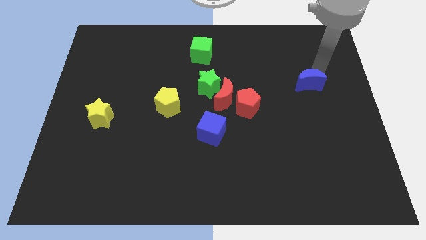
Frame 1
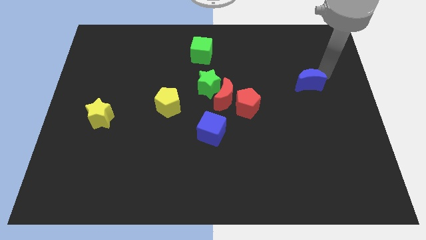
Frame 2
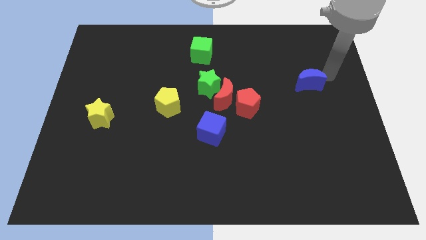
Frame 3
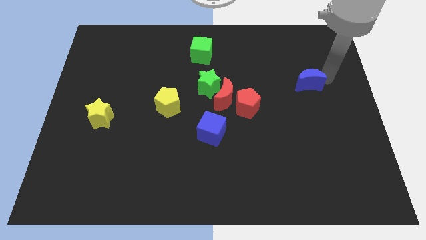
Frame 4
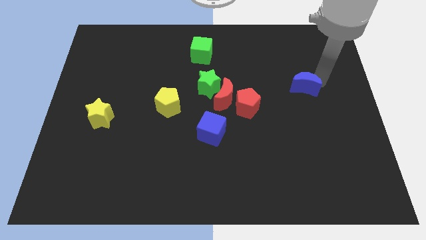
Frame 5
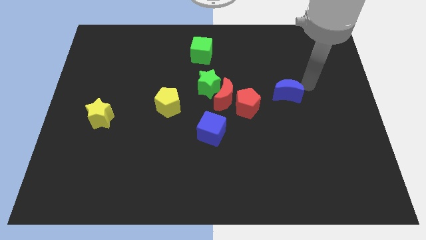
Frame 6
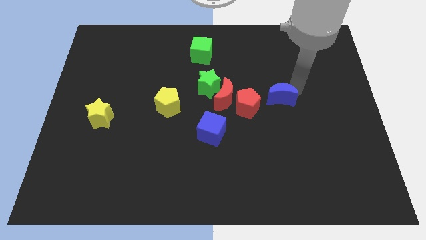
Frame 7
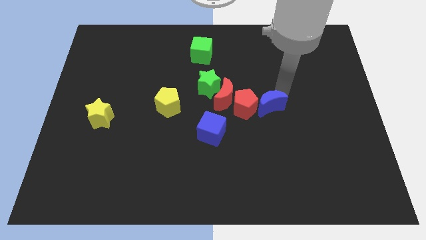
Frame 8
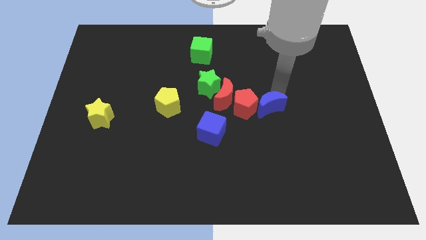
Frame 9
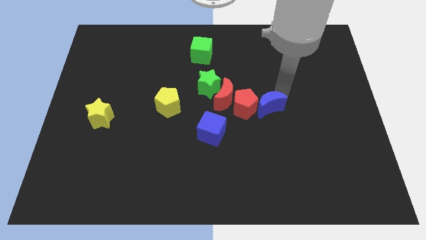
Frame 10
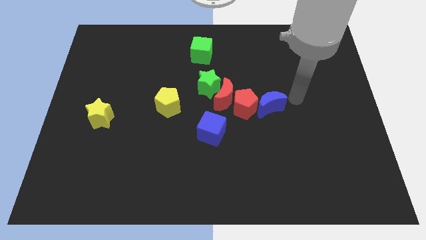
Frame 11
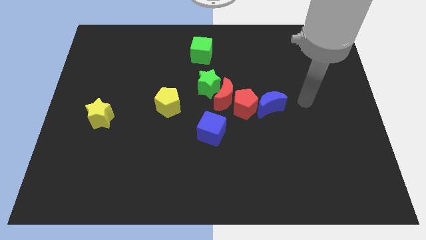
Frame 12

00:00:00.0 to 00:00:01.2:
move the blue crescent close to the red pentagon

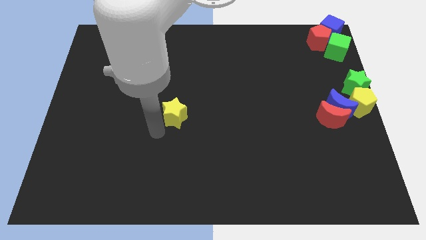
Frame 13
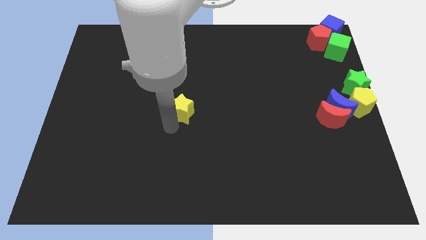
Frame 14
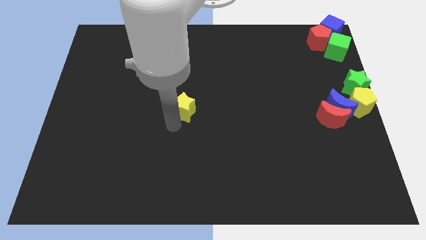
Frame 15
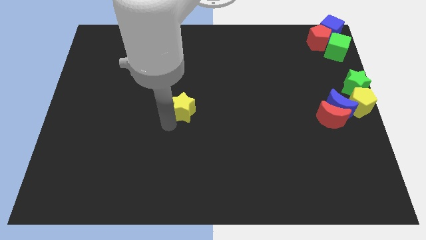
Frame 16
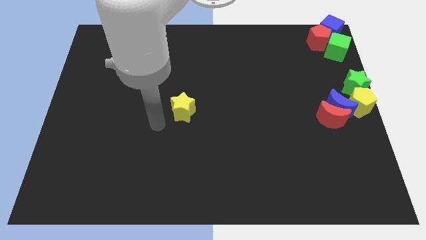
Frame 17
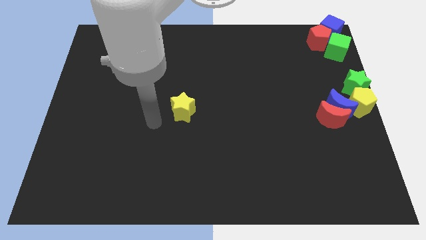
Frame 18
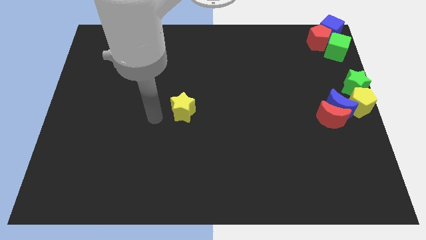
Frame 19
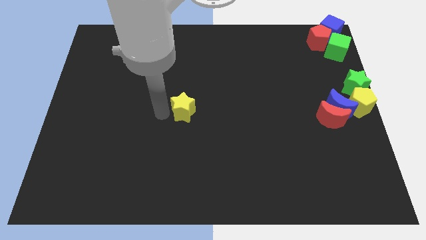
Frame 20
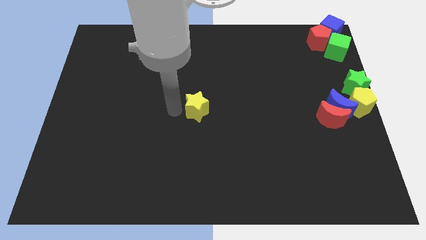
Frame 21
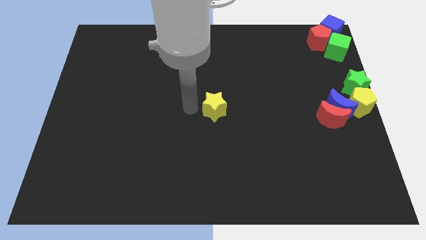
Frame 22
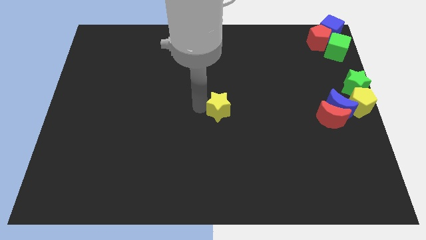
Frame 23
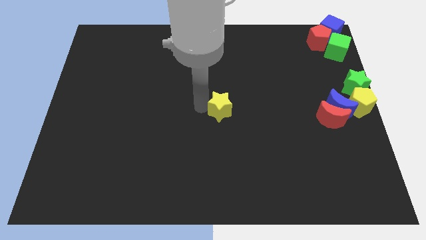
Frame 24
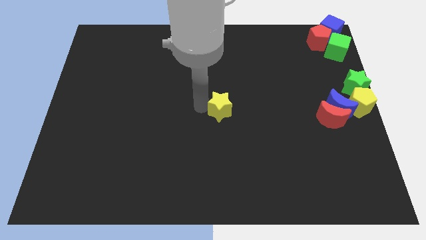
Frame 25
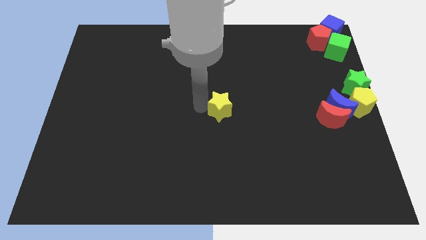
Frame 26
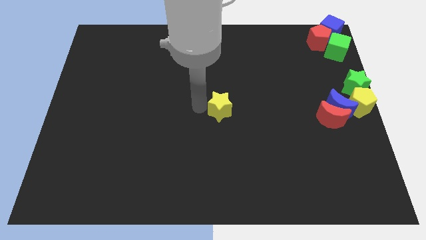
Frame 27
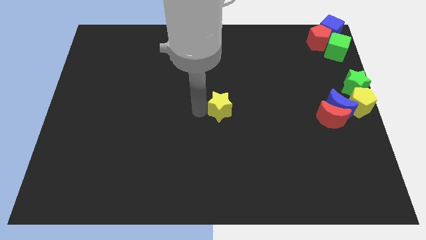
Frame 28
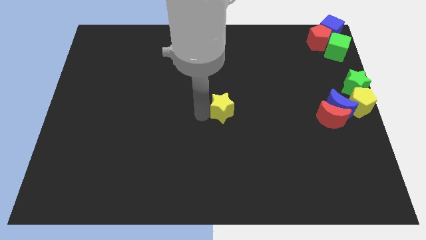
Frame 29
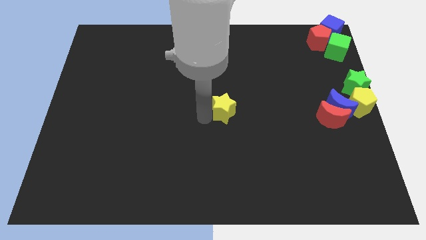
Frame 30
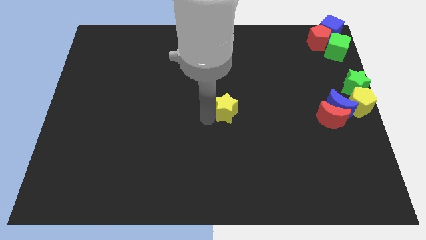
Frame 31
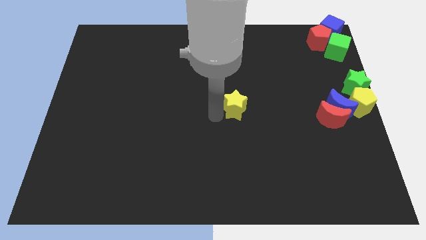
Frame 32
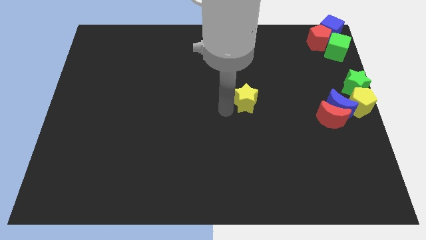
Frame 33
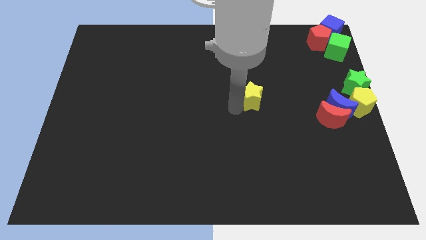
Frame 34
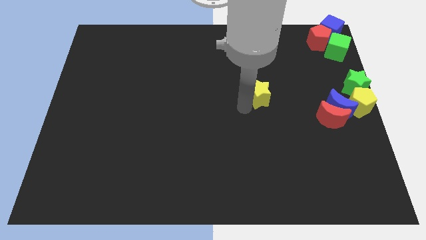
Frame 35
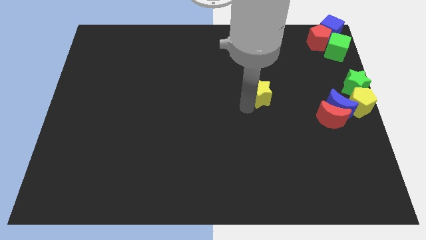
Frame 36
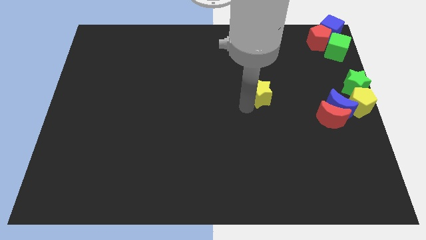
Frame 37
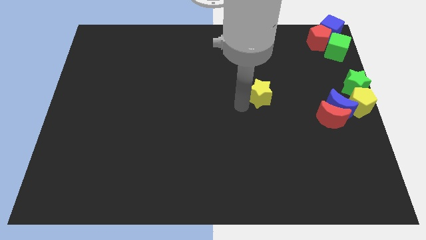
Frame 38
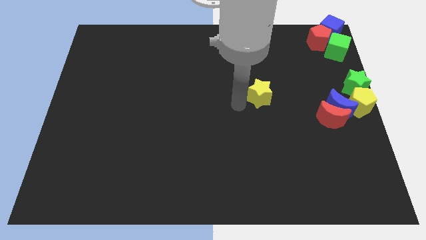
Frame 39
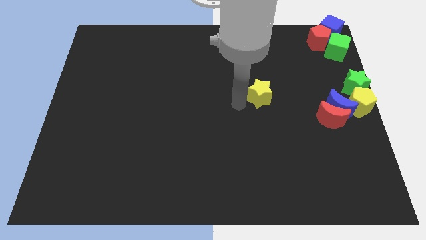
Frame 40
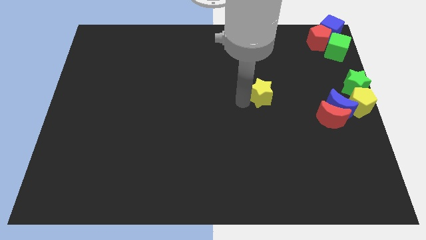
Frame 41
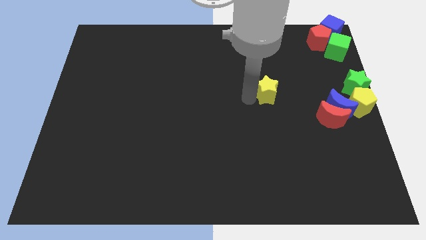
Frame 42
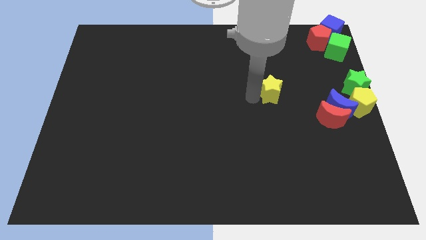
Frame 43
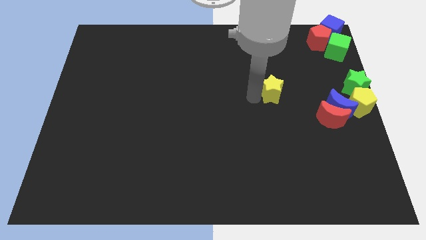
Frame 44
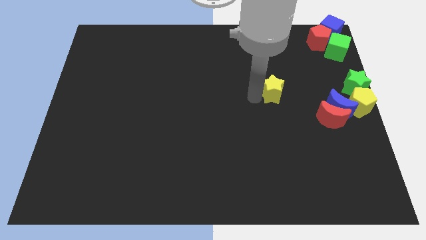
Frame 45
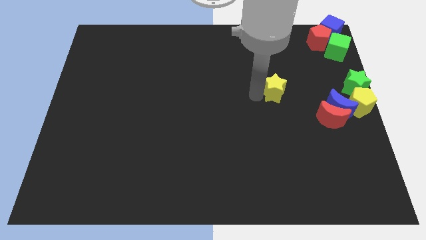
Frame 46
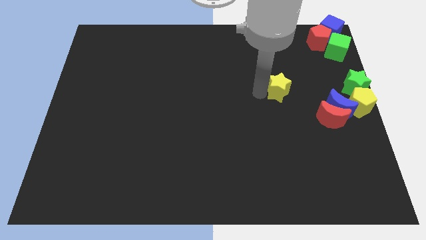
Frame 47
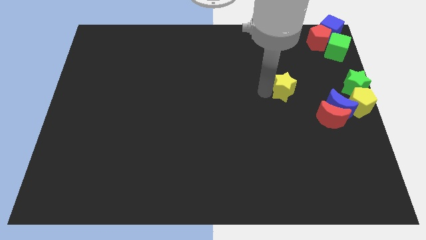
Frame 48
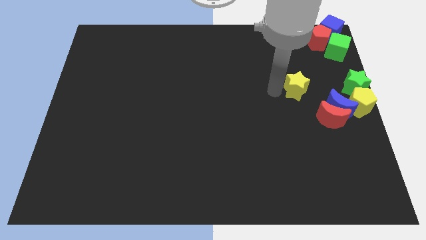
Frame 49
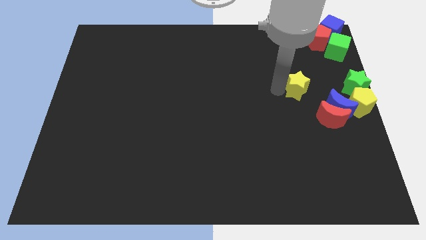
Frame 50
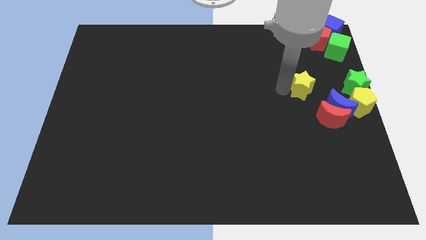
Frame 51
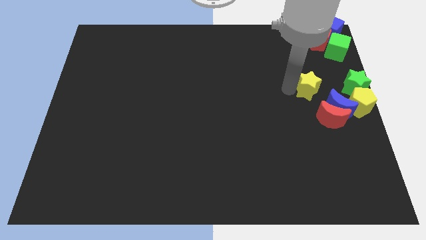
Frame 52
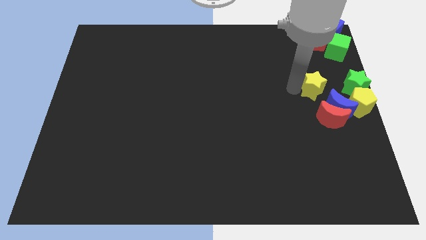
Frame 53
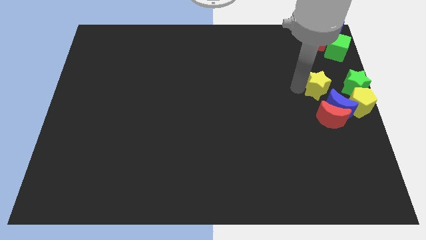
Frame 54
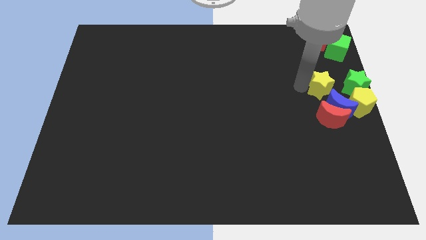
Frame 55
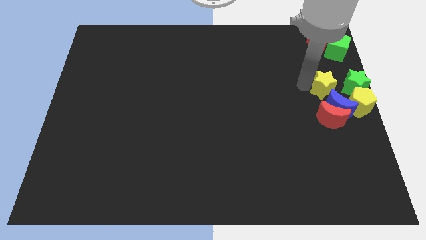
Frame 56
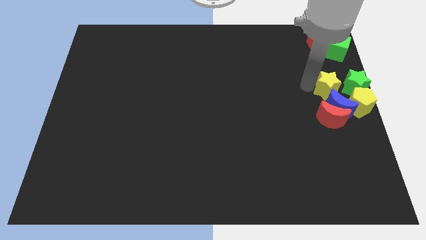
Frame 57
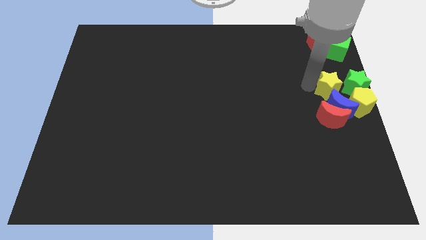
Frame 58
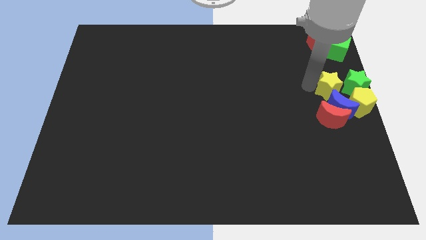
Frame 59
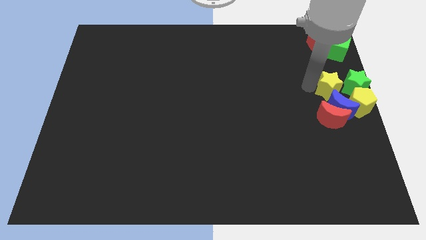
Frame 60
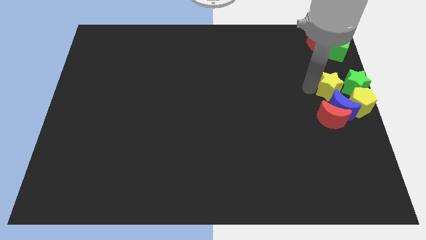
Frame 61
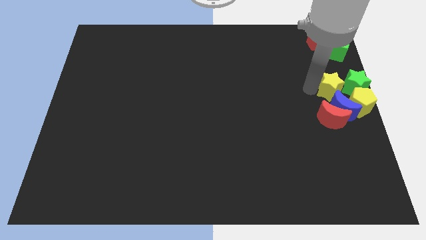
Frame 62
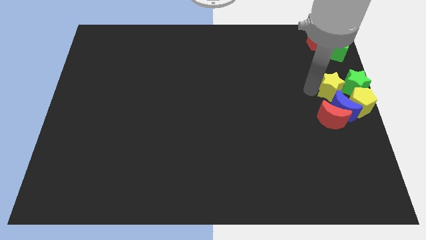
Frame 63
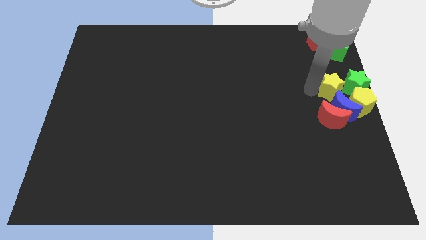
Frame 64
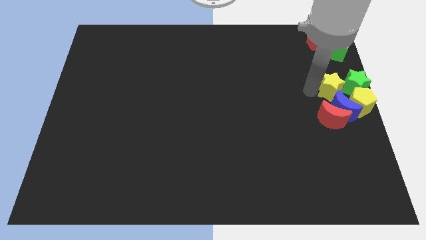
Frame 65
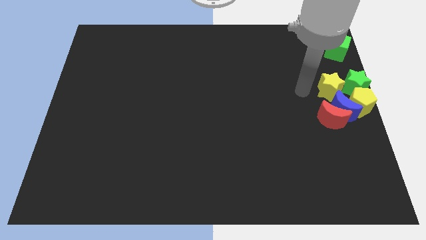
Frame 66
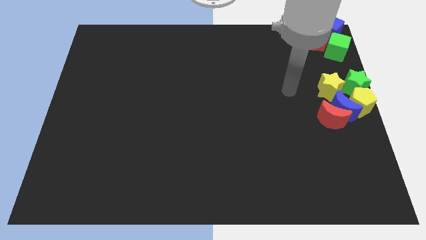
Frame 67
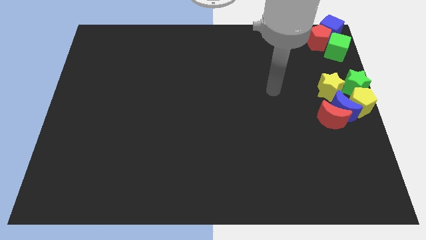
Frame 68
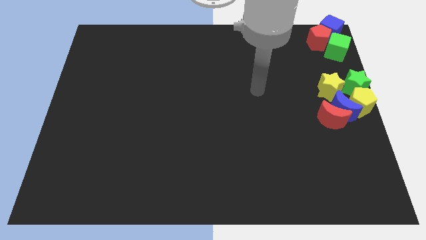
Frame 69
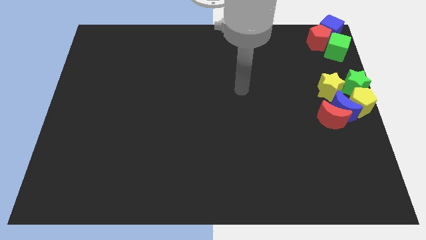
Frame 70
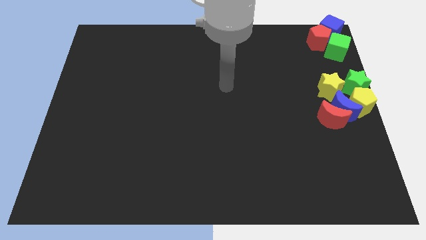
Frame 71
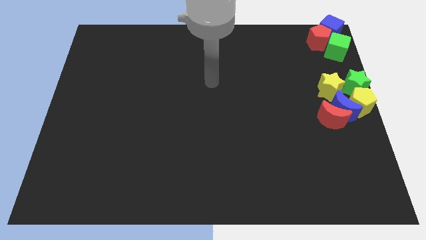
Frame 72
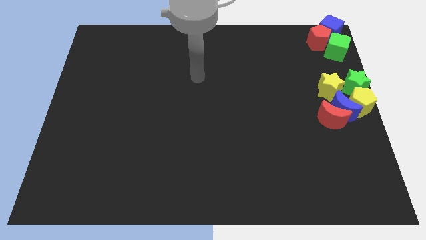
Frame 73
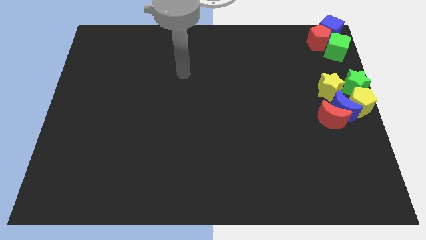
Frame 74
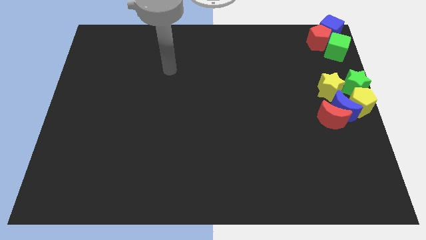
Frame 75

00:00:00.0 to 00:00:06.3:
move yellow star left beside the green star

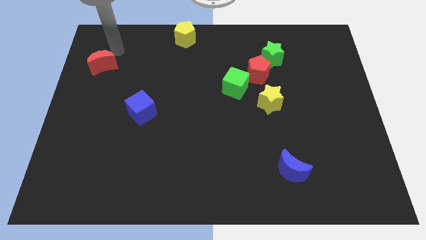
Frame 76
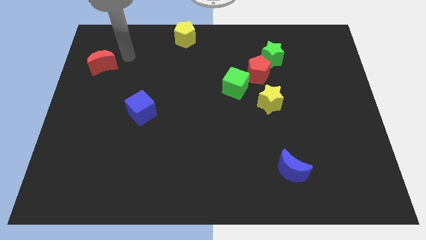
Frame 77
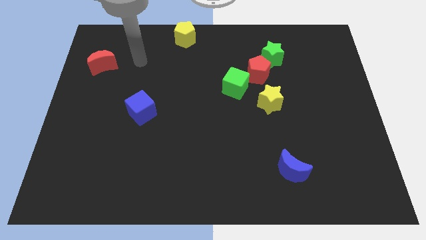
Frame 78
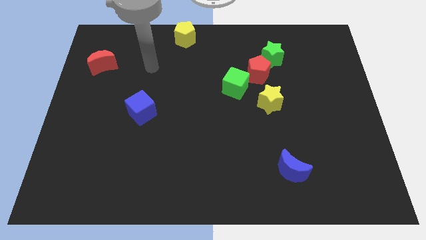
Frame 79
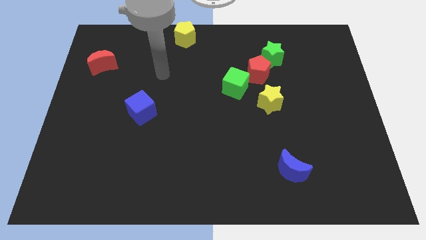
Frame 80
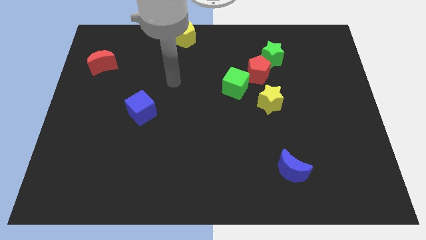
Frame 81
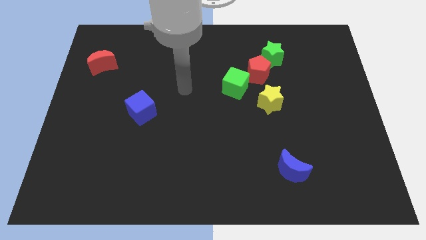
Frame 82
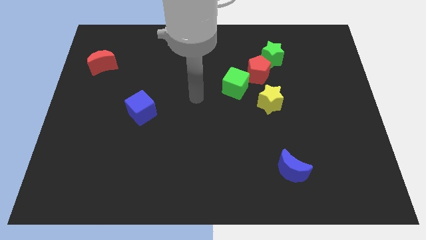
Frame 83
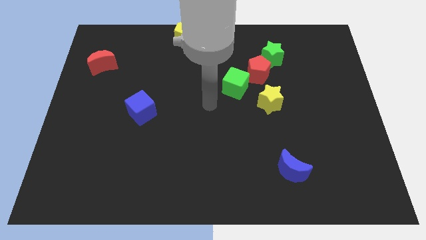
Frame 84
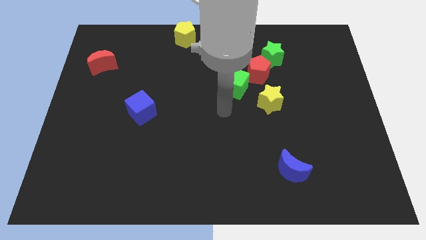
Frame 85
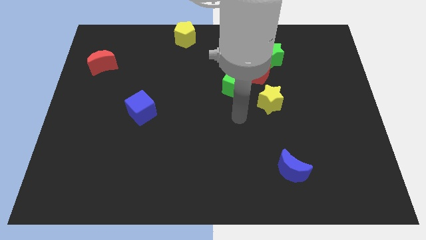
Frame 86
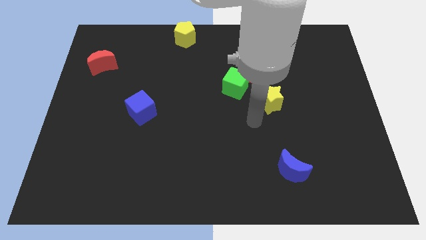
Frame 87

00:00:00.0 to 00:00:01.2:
place your hand under the green cube

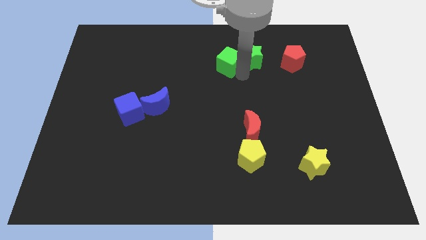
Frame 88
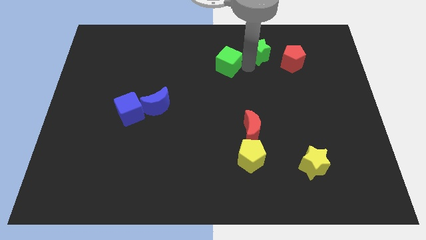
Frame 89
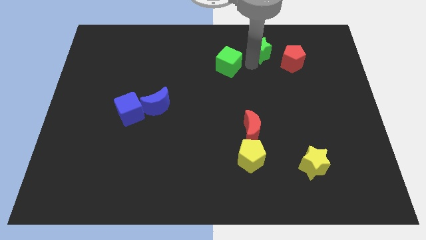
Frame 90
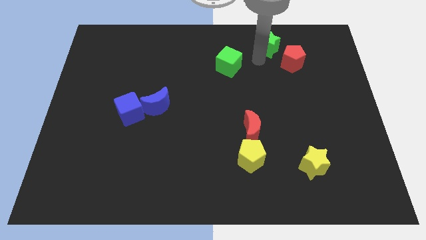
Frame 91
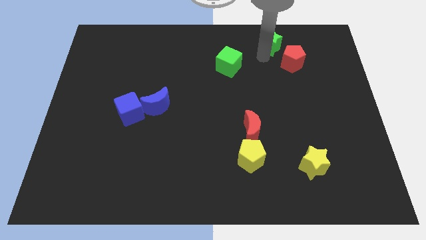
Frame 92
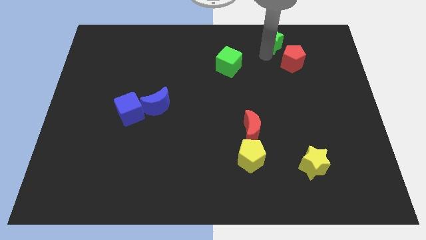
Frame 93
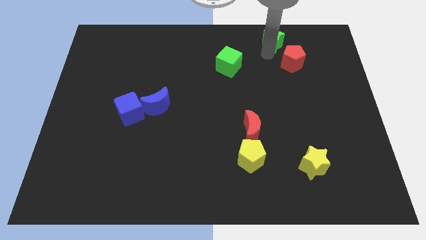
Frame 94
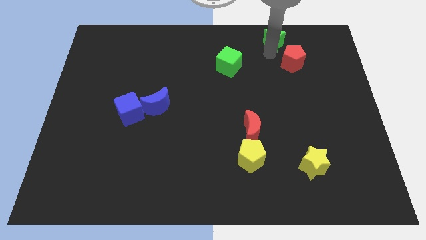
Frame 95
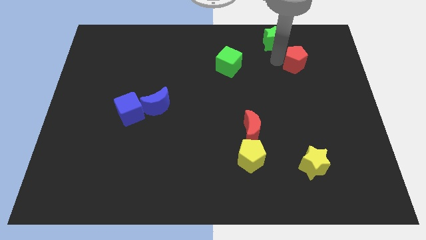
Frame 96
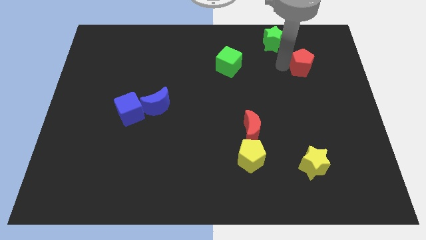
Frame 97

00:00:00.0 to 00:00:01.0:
move green star to the top side of the board
